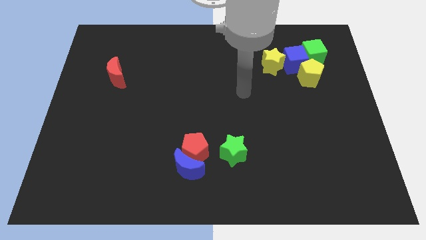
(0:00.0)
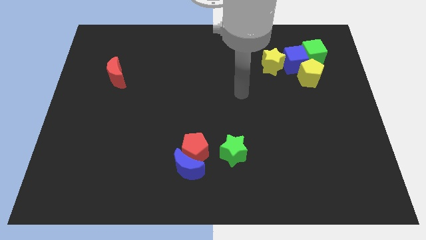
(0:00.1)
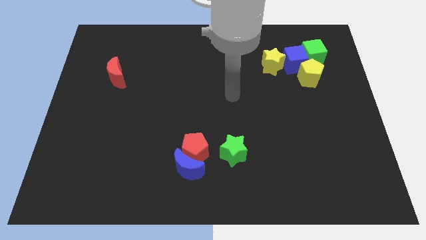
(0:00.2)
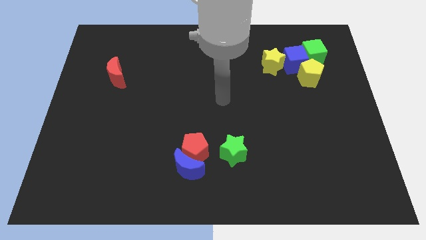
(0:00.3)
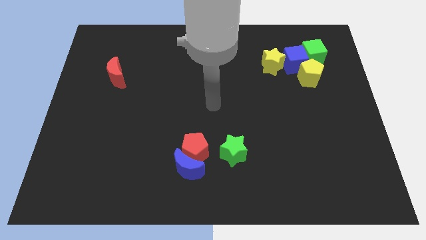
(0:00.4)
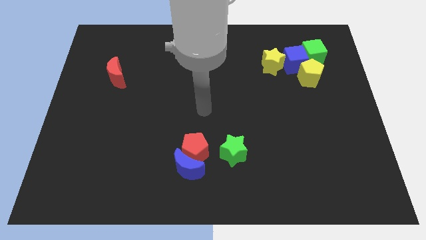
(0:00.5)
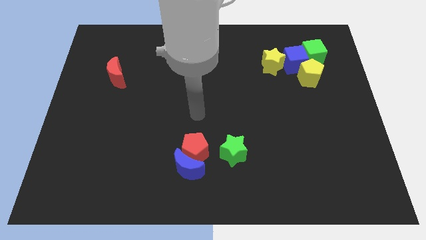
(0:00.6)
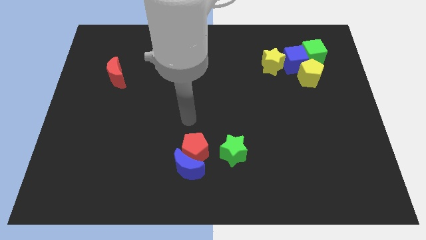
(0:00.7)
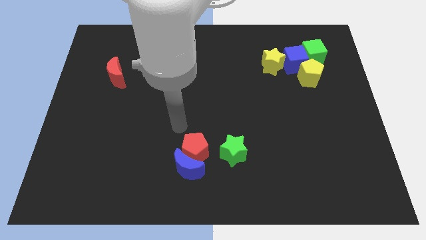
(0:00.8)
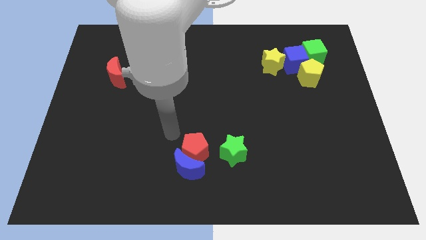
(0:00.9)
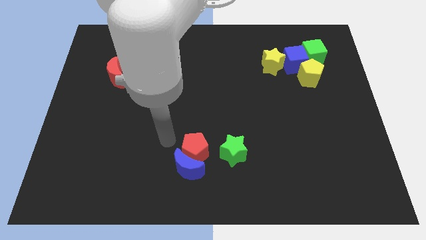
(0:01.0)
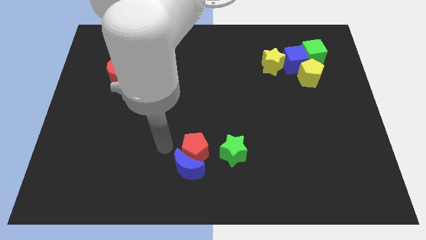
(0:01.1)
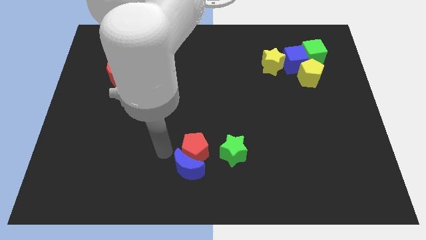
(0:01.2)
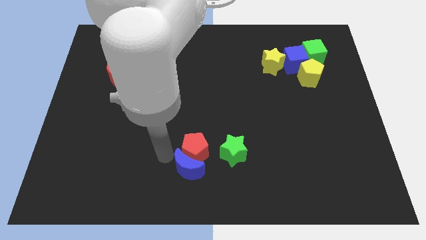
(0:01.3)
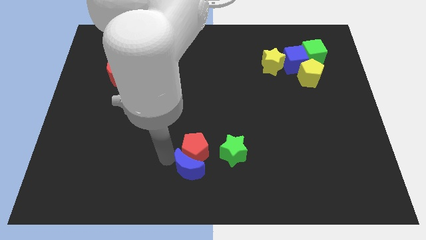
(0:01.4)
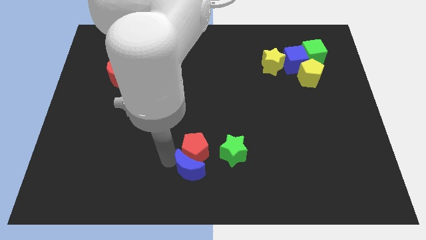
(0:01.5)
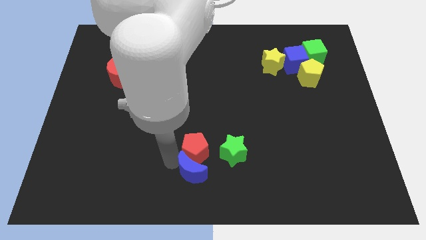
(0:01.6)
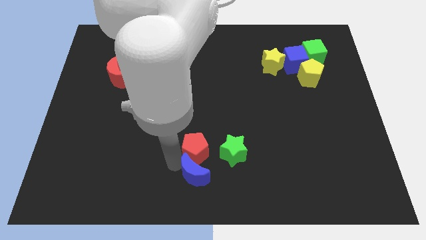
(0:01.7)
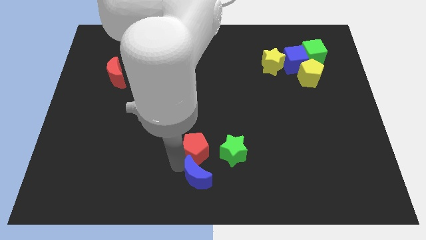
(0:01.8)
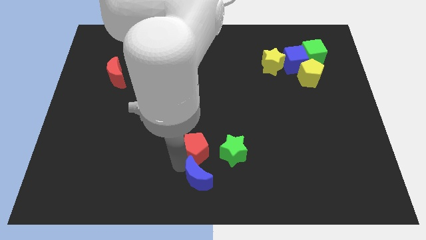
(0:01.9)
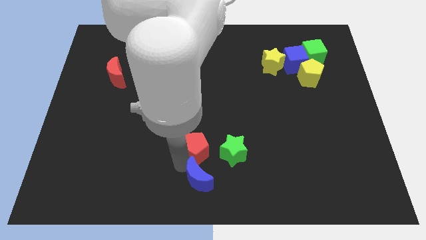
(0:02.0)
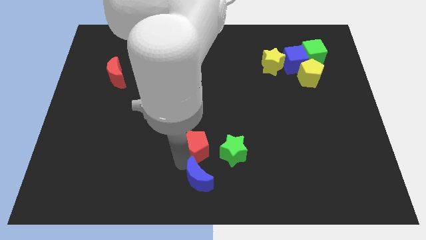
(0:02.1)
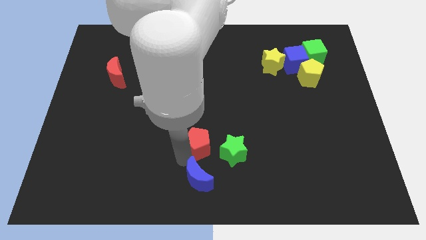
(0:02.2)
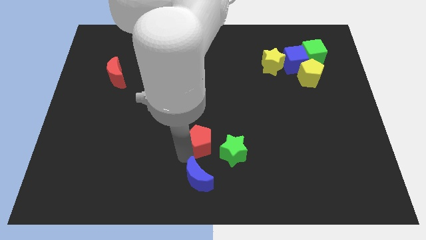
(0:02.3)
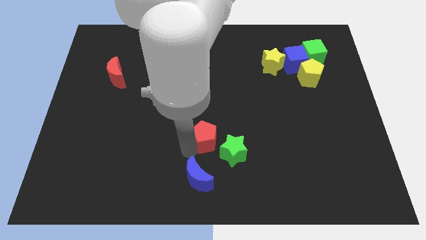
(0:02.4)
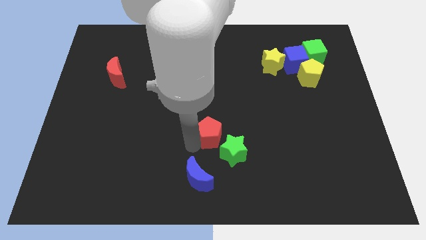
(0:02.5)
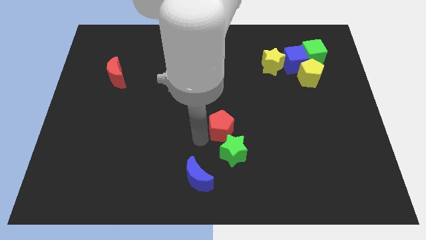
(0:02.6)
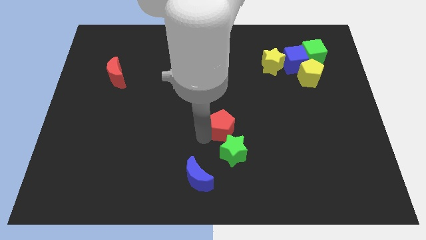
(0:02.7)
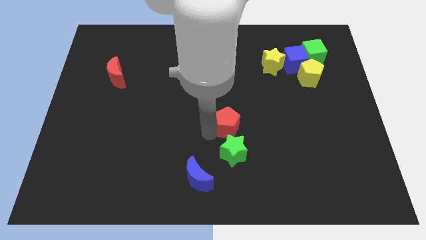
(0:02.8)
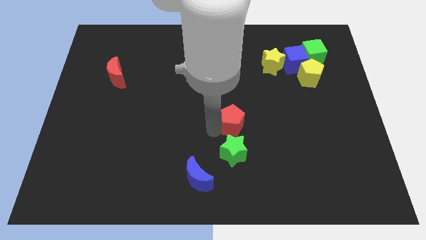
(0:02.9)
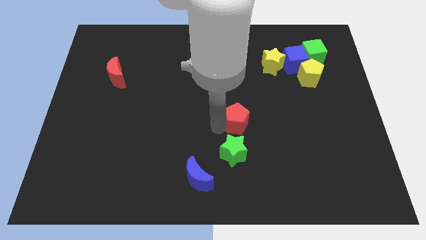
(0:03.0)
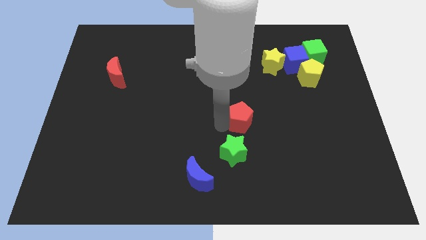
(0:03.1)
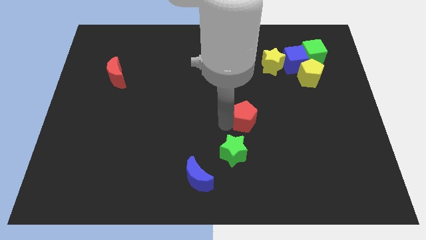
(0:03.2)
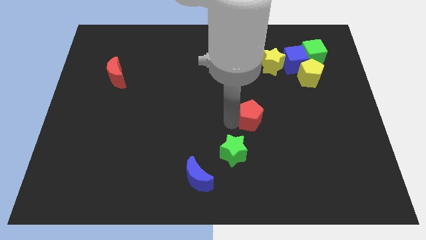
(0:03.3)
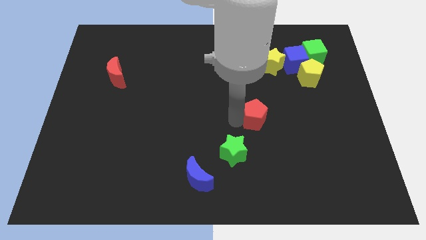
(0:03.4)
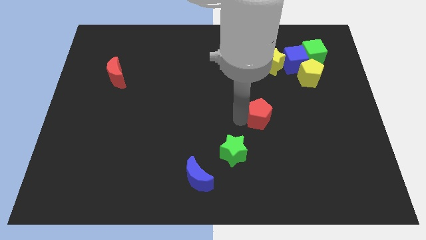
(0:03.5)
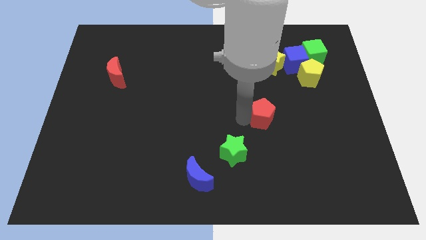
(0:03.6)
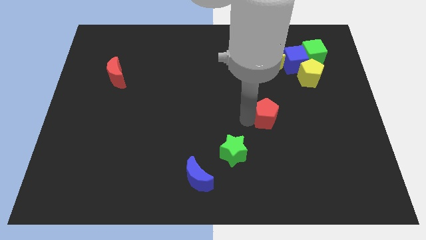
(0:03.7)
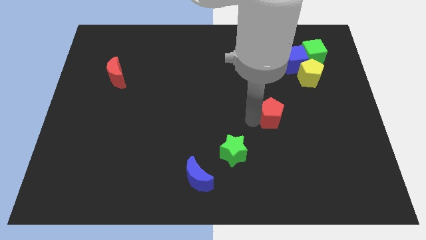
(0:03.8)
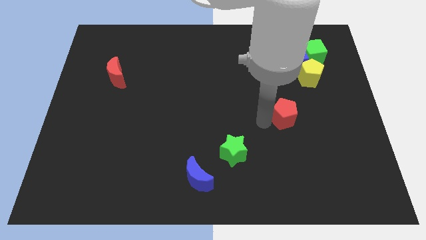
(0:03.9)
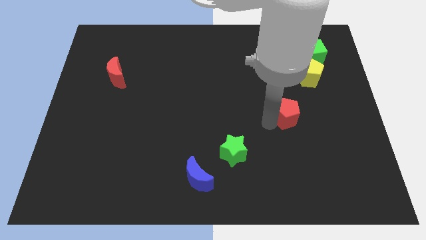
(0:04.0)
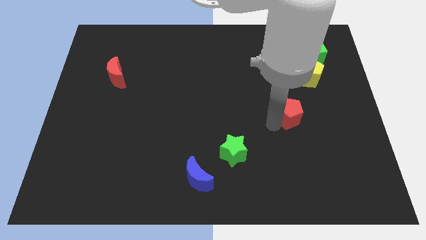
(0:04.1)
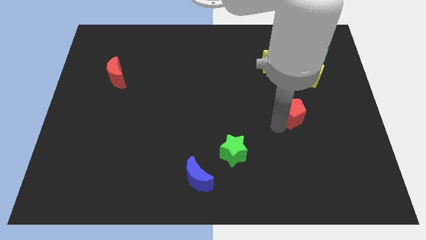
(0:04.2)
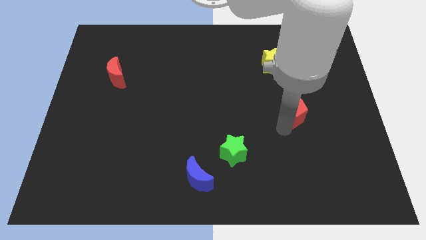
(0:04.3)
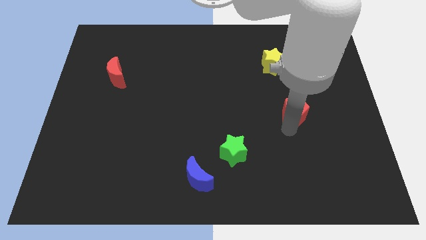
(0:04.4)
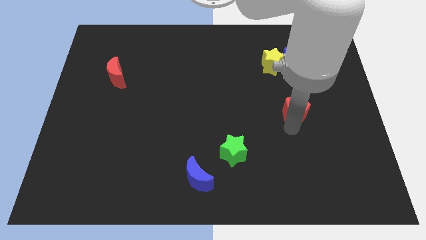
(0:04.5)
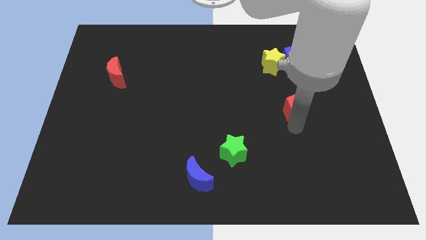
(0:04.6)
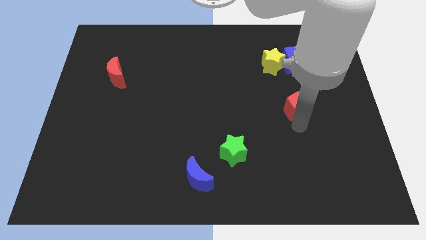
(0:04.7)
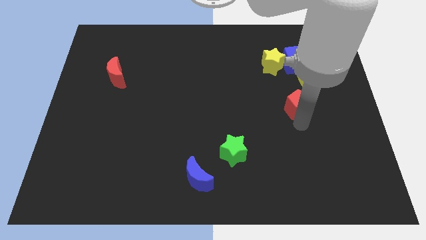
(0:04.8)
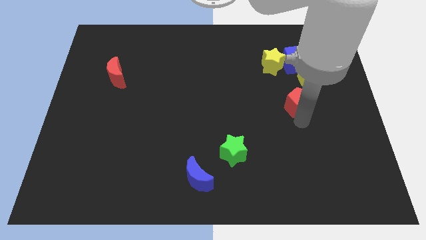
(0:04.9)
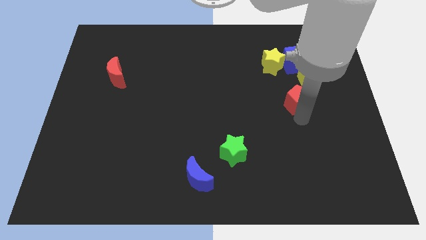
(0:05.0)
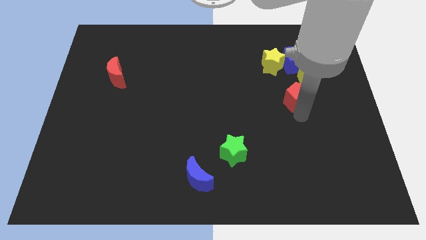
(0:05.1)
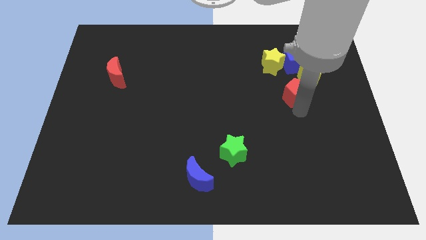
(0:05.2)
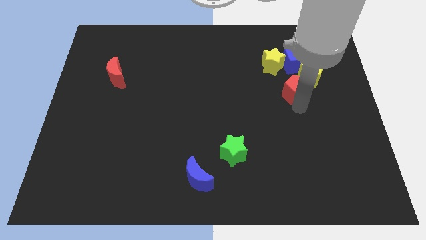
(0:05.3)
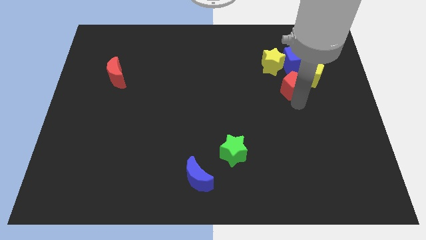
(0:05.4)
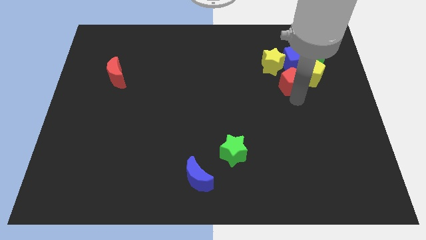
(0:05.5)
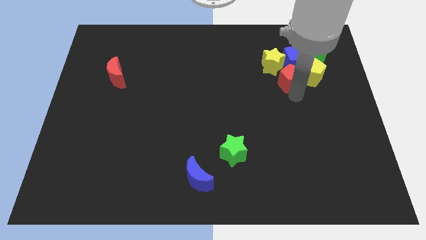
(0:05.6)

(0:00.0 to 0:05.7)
push the red pentagon towards the yellow pentagon

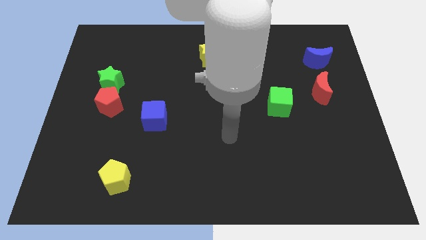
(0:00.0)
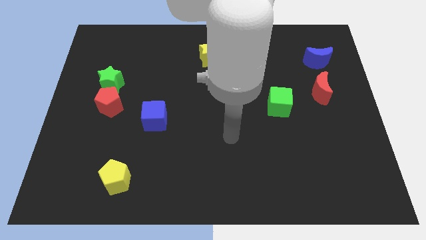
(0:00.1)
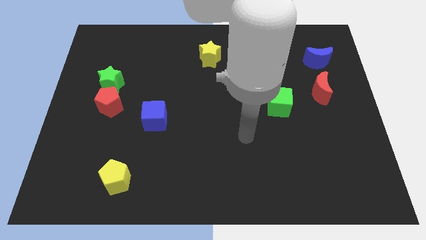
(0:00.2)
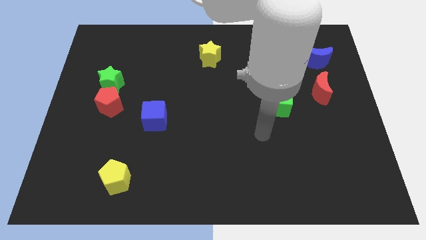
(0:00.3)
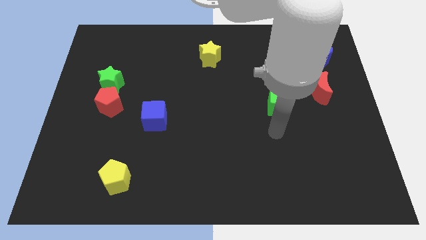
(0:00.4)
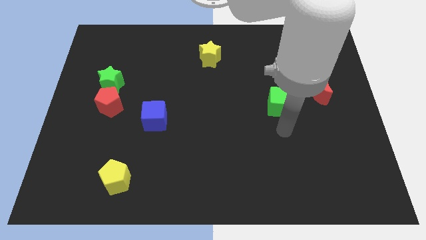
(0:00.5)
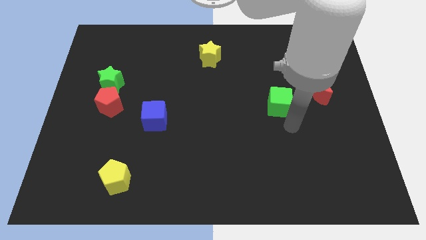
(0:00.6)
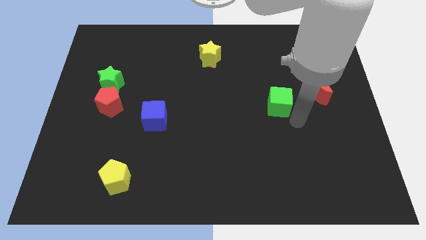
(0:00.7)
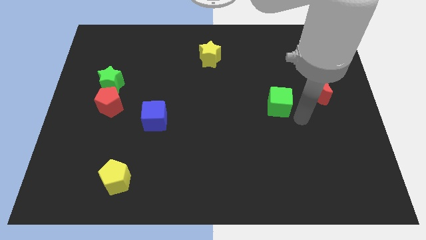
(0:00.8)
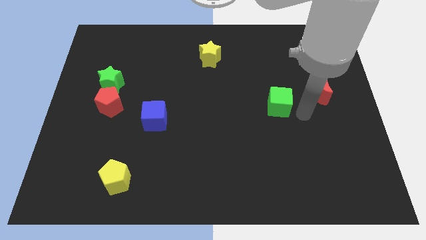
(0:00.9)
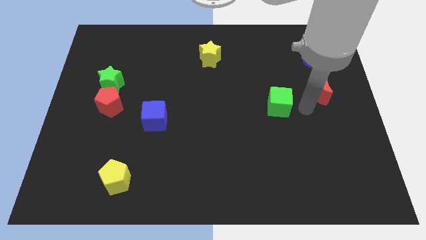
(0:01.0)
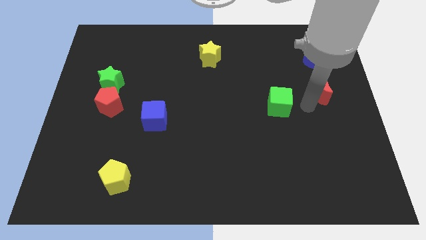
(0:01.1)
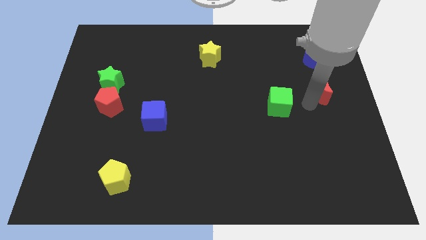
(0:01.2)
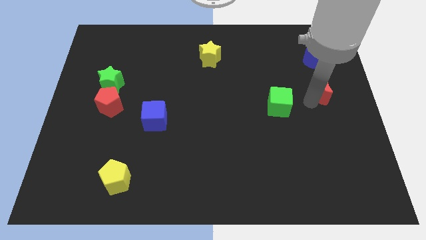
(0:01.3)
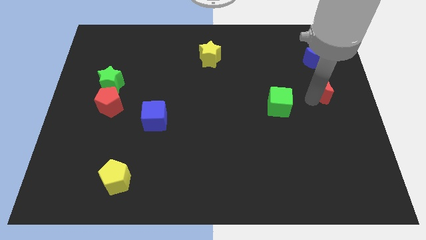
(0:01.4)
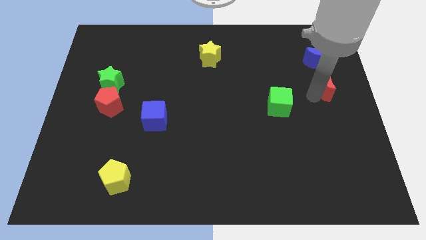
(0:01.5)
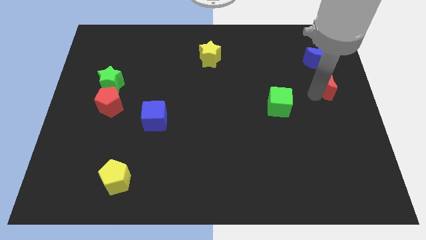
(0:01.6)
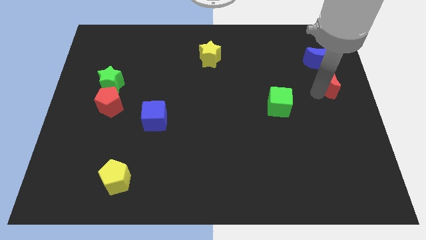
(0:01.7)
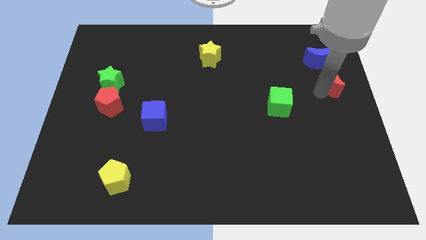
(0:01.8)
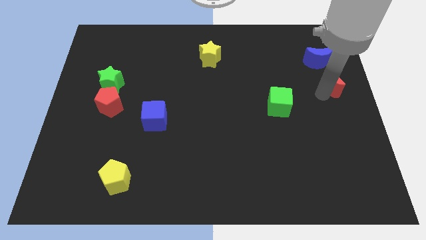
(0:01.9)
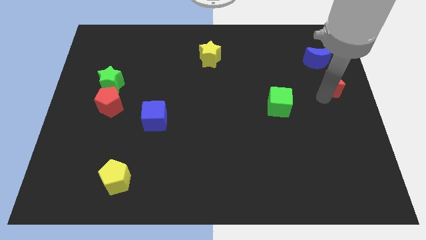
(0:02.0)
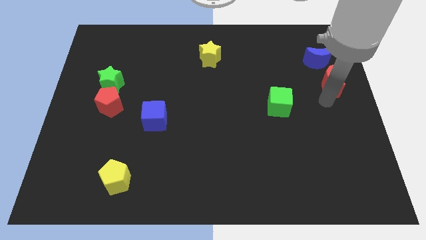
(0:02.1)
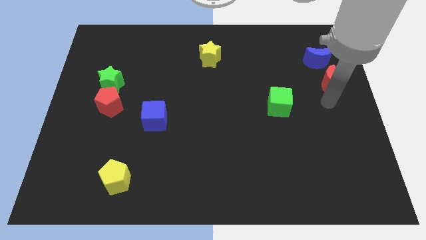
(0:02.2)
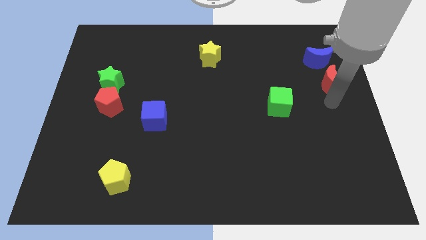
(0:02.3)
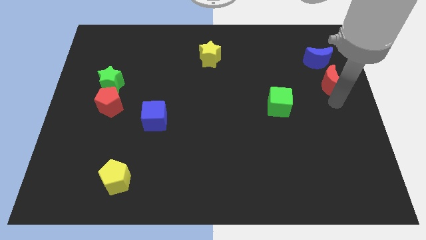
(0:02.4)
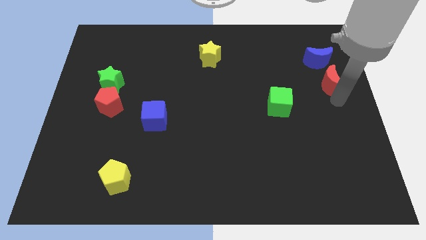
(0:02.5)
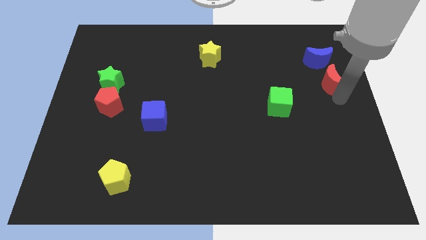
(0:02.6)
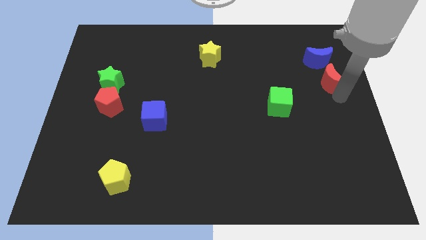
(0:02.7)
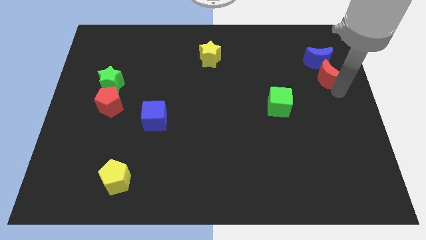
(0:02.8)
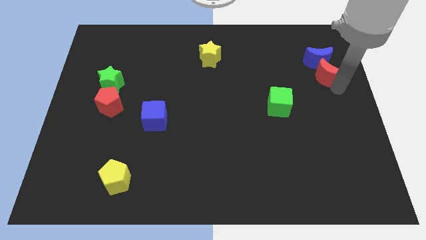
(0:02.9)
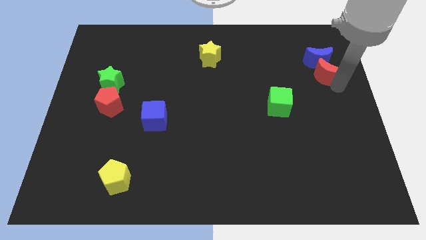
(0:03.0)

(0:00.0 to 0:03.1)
slide the red moon next to the blue moon
